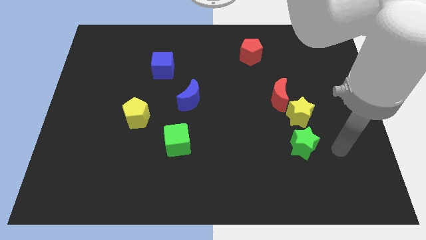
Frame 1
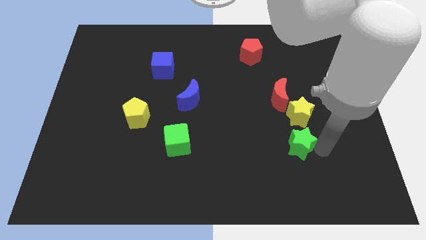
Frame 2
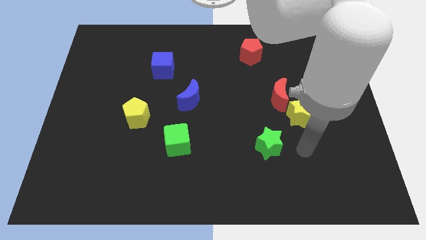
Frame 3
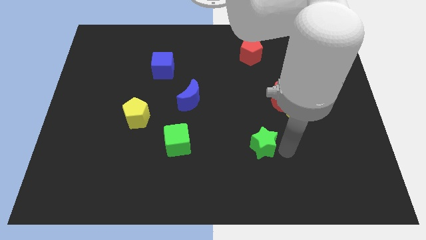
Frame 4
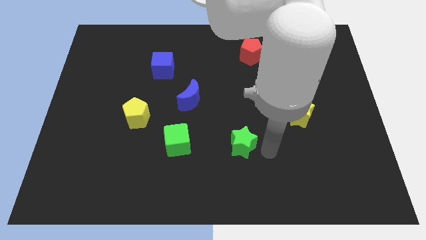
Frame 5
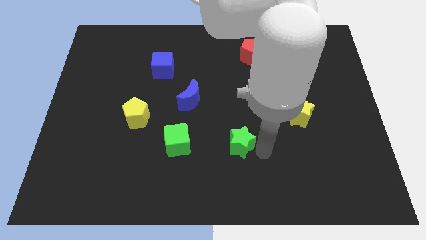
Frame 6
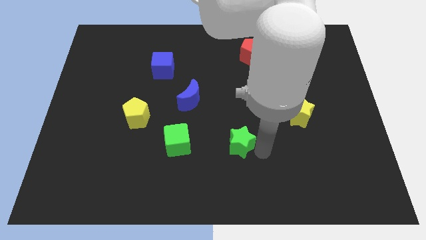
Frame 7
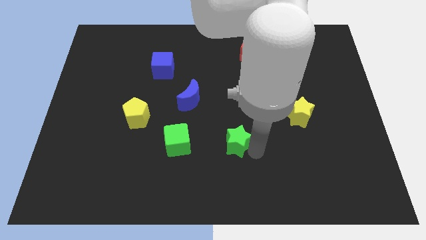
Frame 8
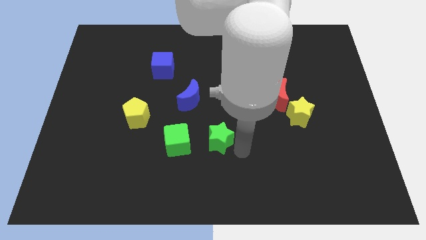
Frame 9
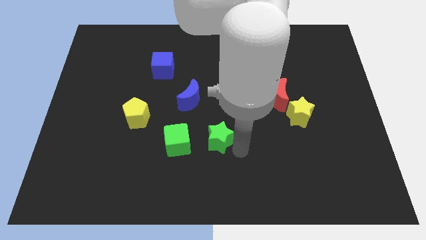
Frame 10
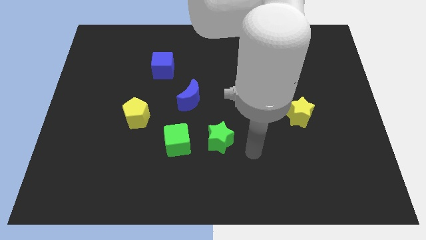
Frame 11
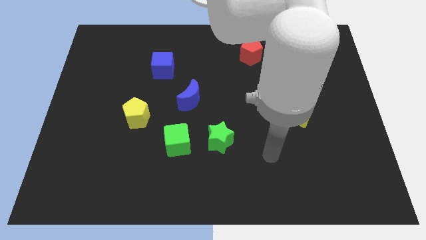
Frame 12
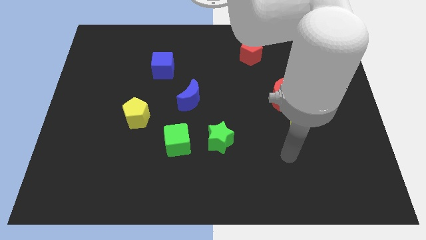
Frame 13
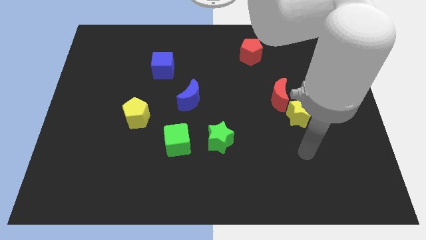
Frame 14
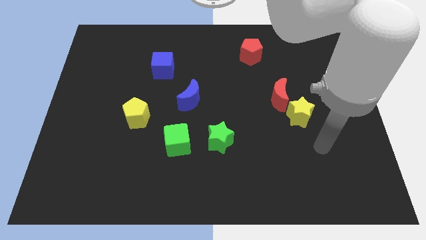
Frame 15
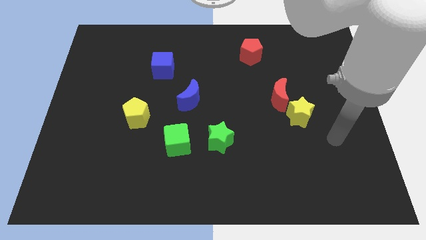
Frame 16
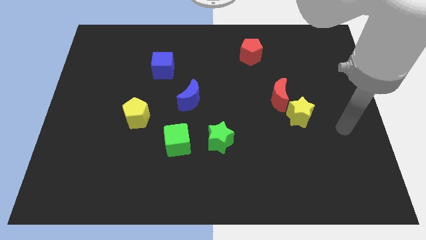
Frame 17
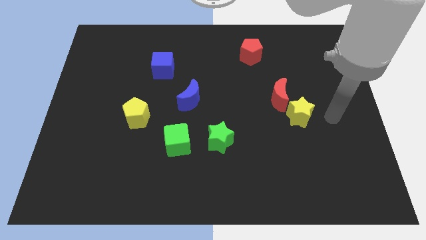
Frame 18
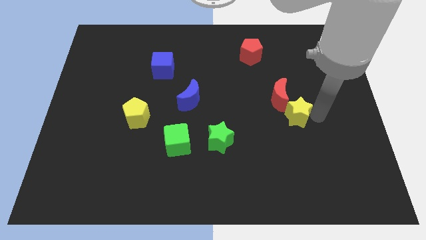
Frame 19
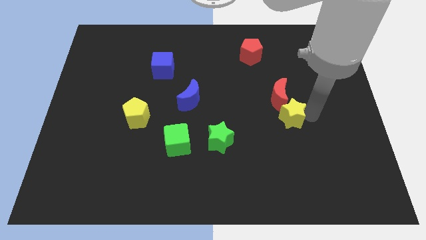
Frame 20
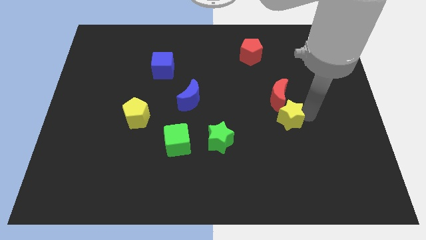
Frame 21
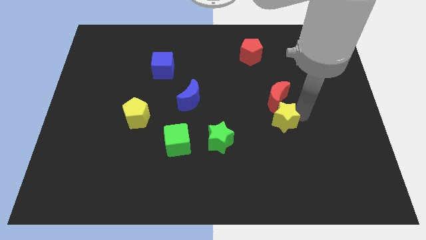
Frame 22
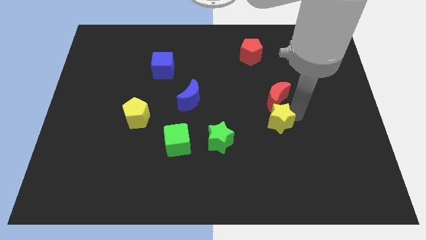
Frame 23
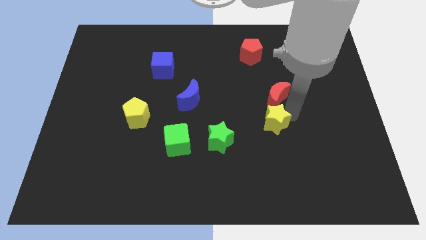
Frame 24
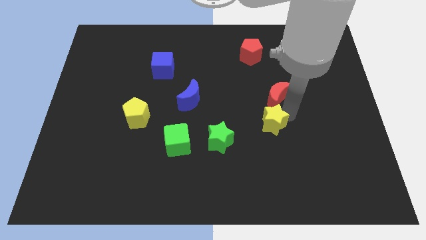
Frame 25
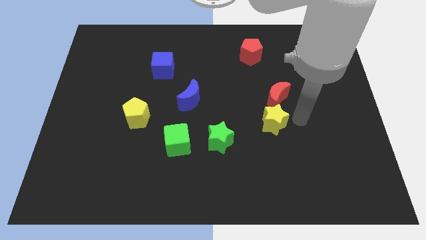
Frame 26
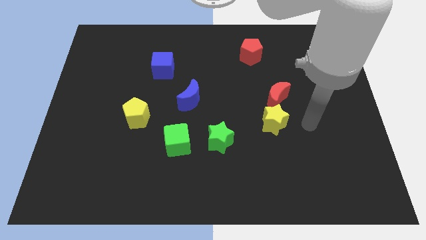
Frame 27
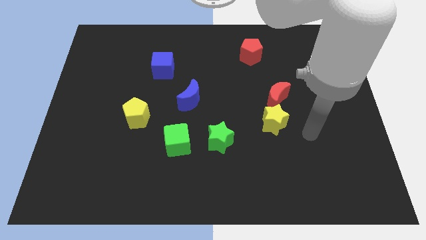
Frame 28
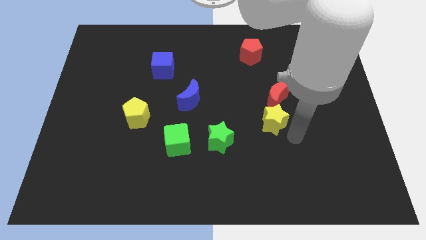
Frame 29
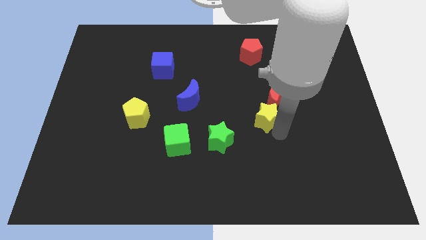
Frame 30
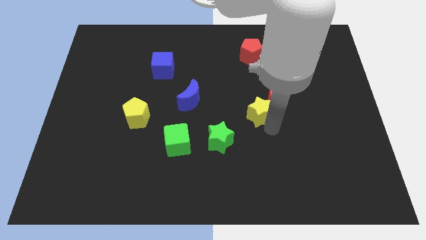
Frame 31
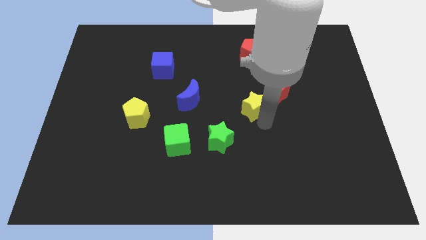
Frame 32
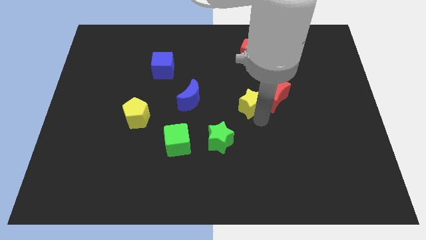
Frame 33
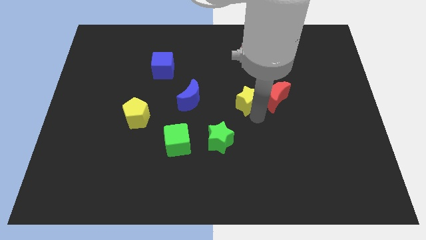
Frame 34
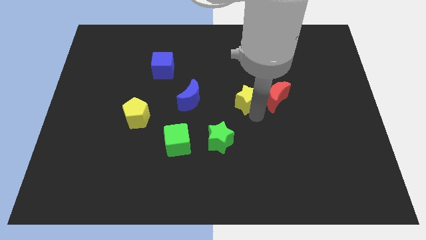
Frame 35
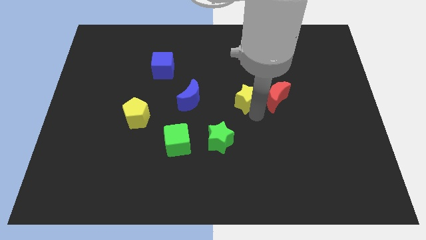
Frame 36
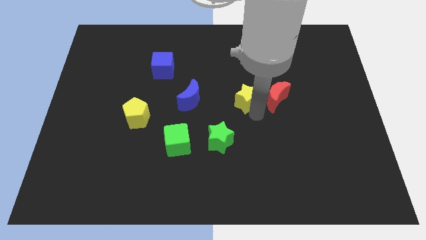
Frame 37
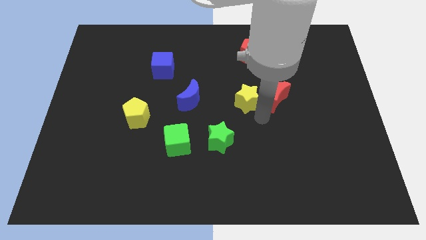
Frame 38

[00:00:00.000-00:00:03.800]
place the yellow star towards the left to the red crescent

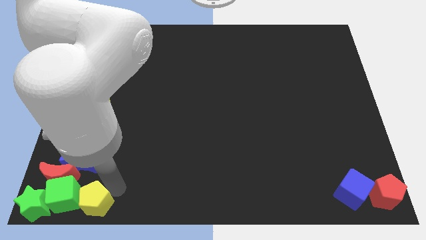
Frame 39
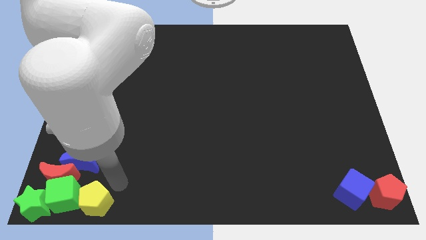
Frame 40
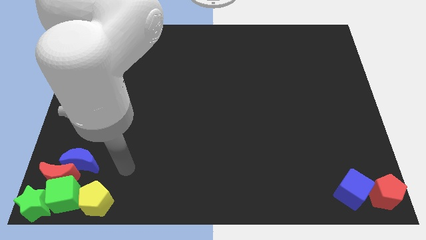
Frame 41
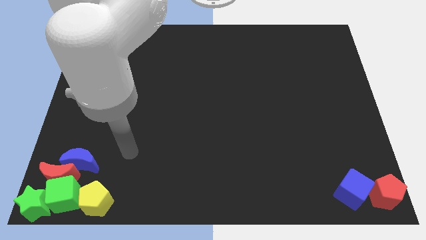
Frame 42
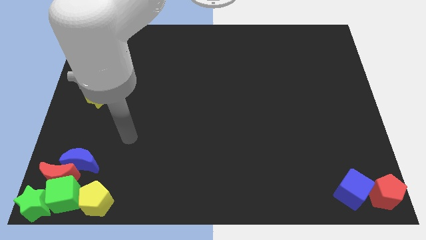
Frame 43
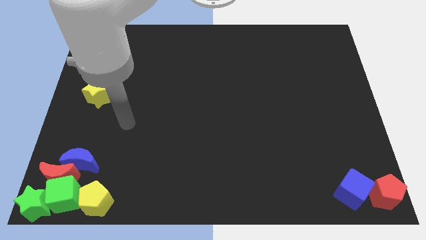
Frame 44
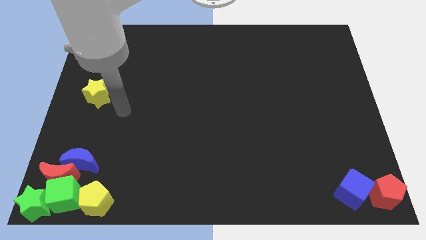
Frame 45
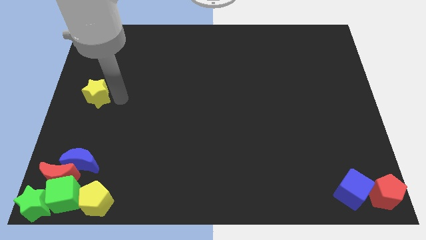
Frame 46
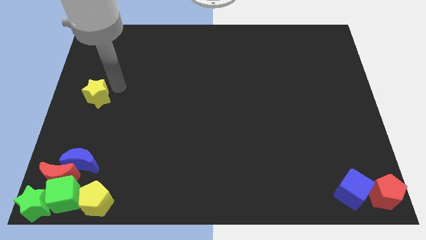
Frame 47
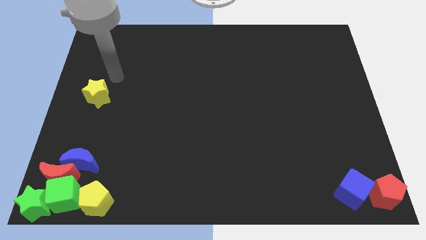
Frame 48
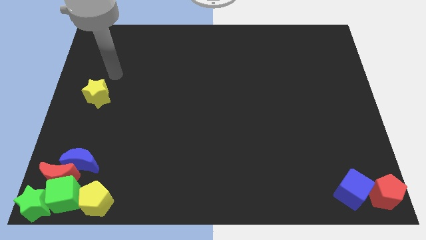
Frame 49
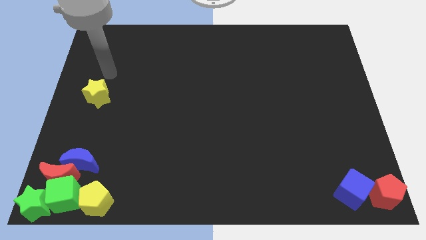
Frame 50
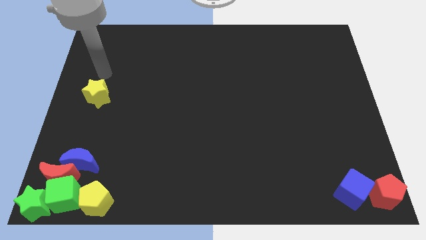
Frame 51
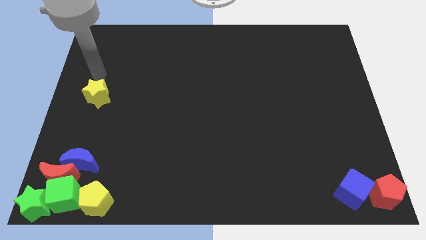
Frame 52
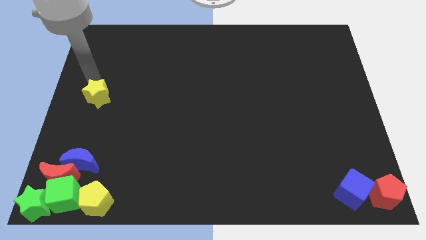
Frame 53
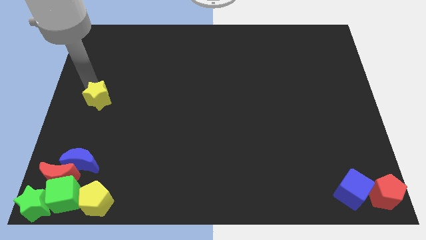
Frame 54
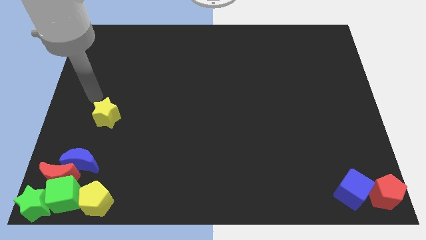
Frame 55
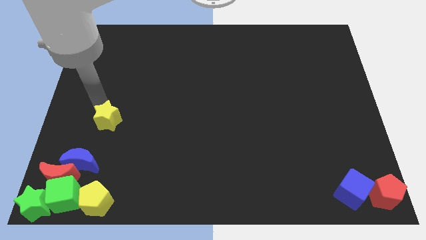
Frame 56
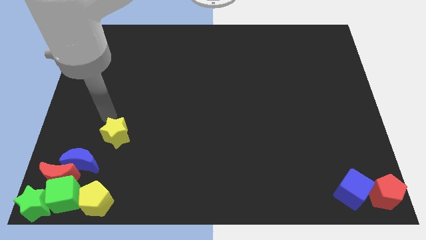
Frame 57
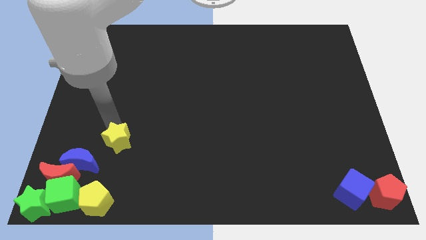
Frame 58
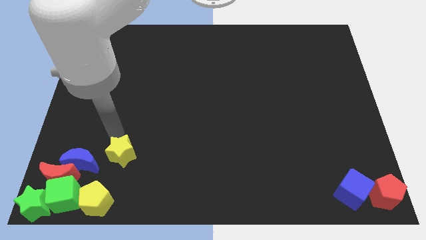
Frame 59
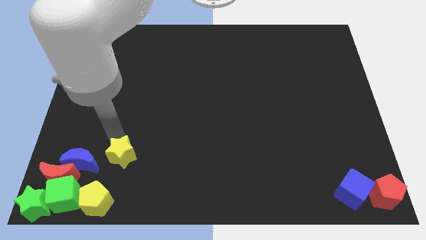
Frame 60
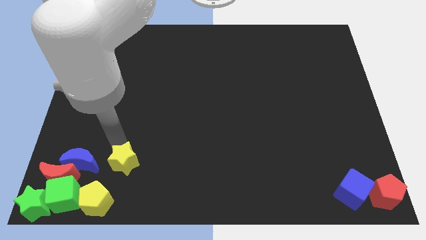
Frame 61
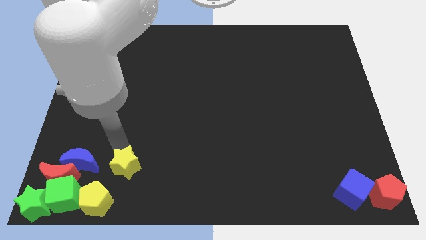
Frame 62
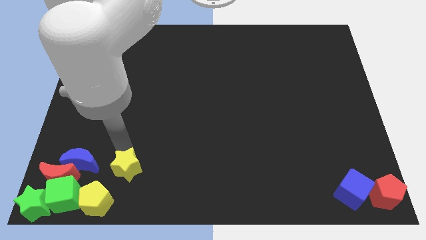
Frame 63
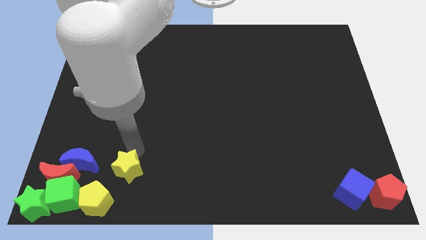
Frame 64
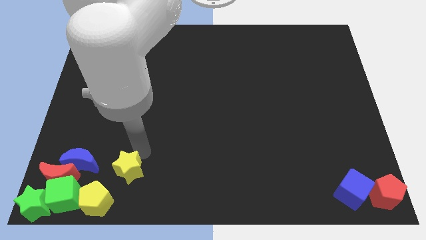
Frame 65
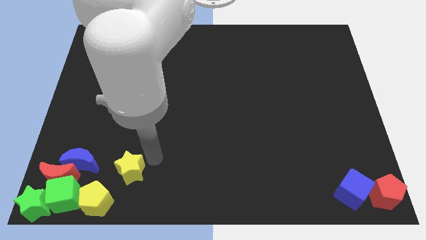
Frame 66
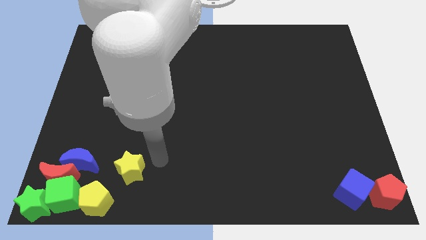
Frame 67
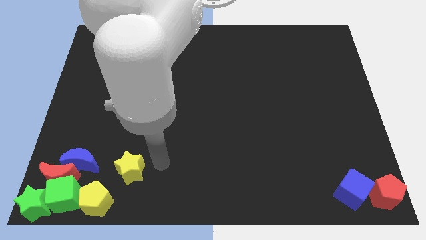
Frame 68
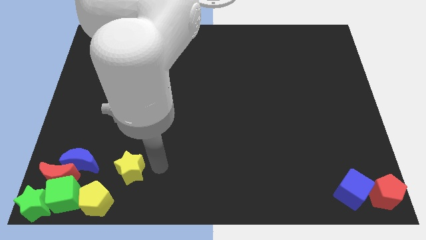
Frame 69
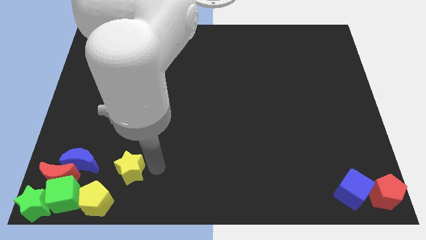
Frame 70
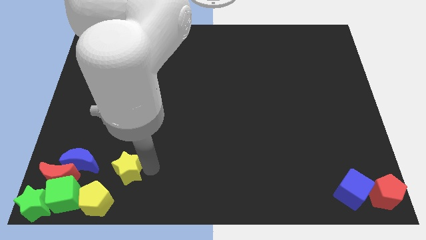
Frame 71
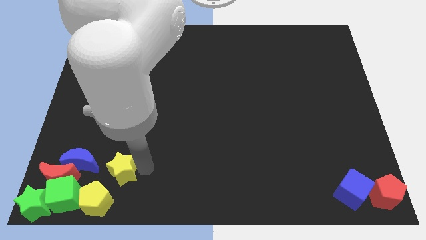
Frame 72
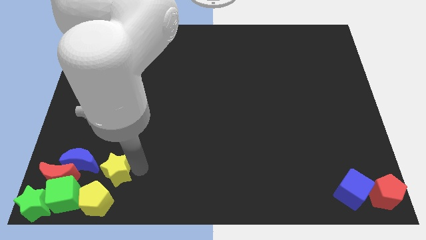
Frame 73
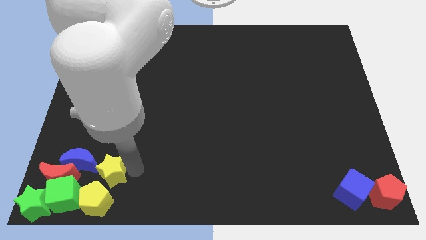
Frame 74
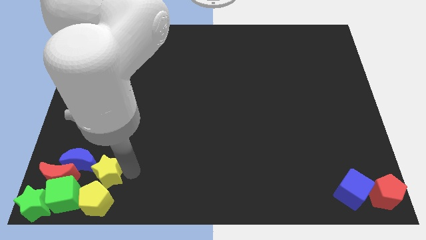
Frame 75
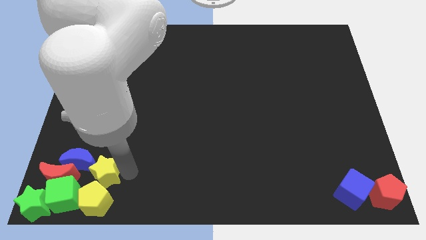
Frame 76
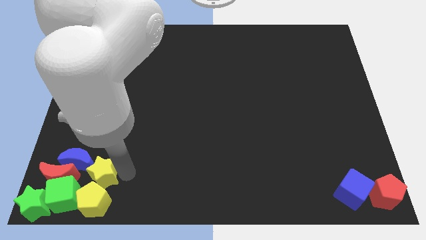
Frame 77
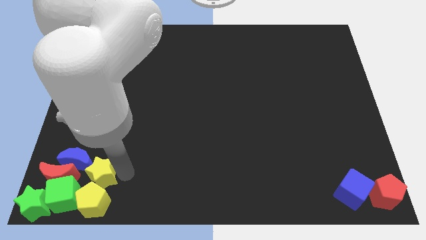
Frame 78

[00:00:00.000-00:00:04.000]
push the yellow star into the group of blocks

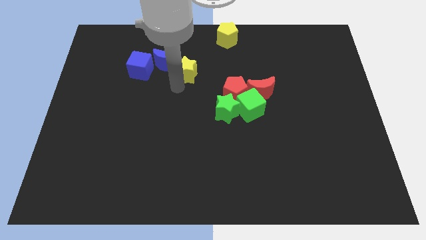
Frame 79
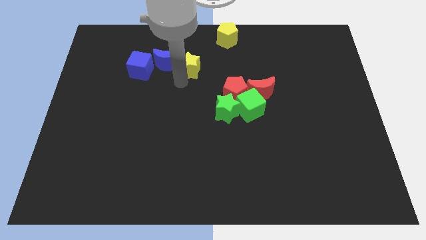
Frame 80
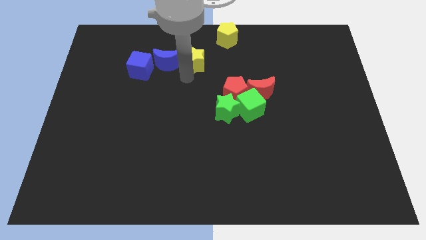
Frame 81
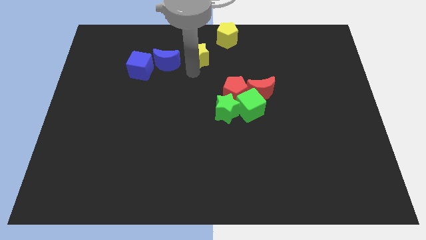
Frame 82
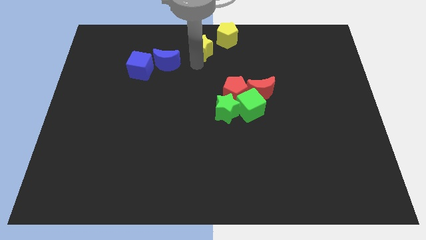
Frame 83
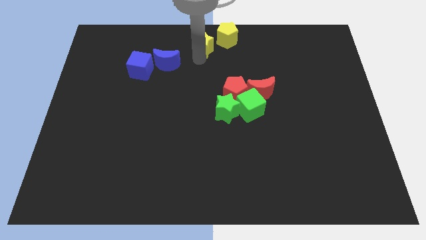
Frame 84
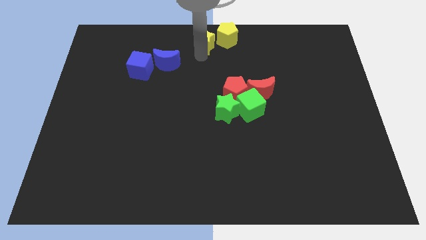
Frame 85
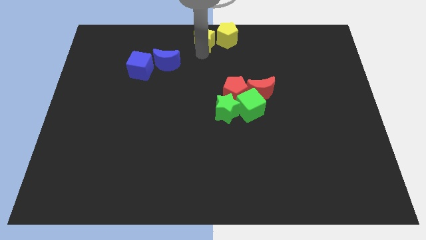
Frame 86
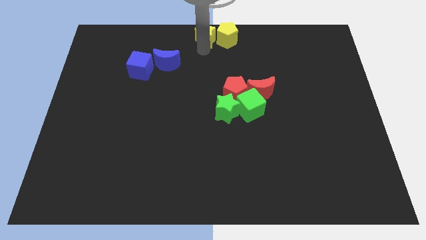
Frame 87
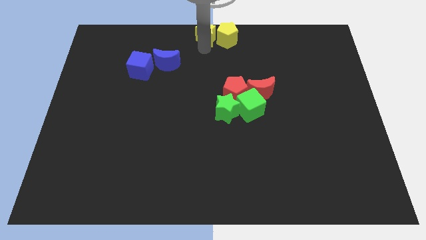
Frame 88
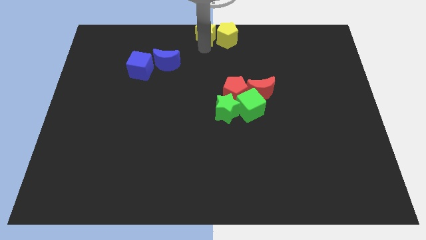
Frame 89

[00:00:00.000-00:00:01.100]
place yellow star beside yellow pentagon
